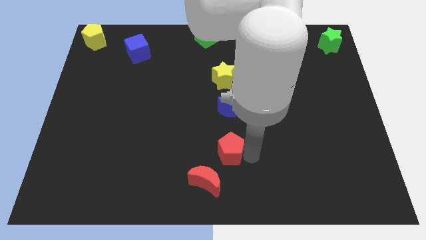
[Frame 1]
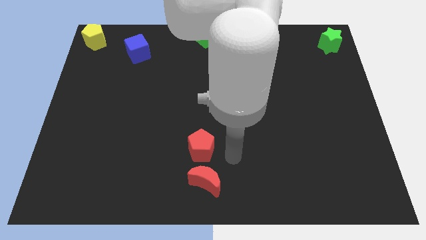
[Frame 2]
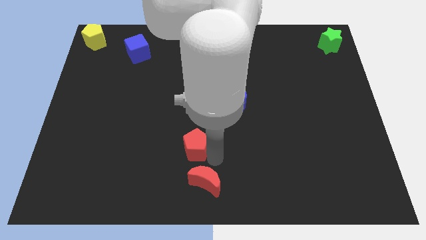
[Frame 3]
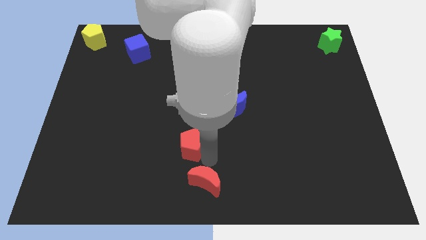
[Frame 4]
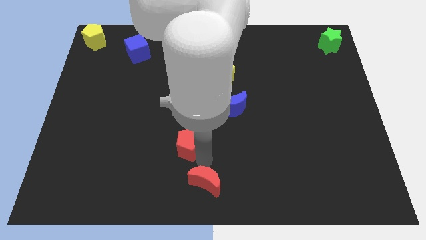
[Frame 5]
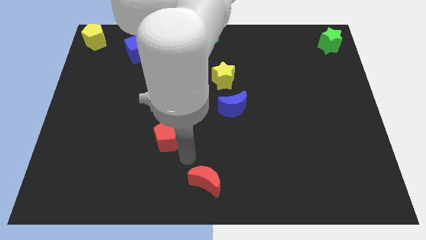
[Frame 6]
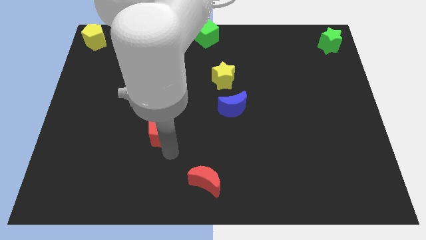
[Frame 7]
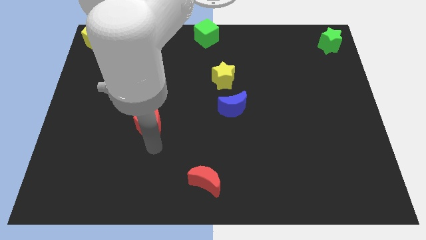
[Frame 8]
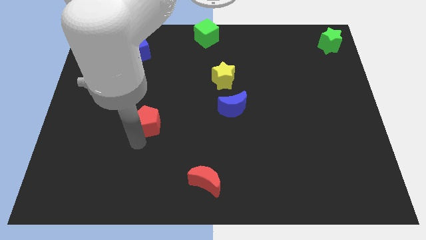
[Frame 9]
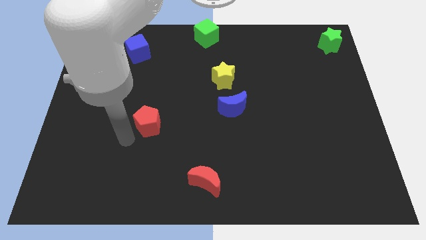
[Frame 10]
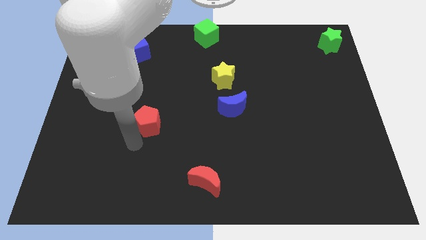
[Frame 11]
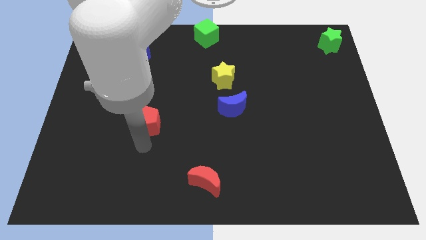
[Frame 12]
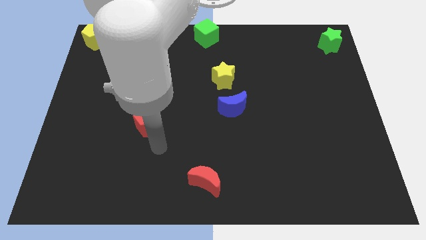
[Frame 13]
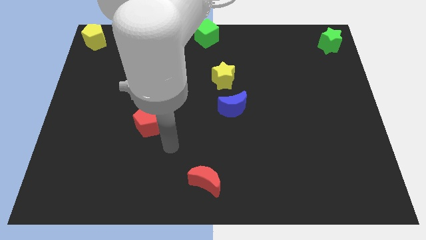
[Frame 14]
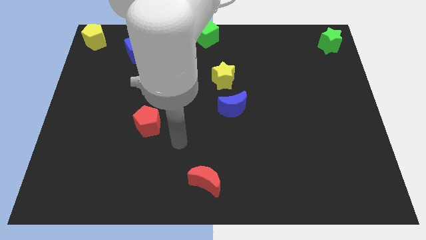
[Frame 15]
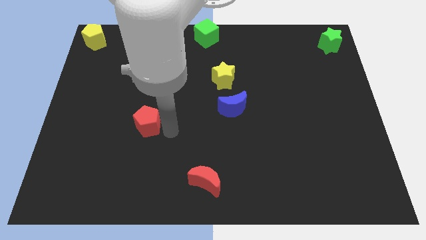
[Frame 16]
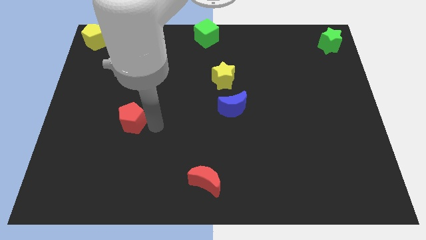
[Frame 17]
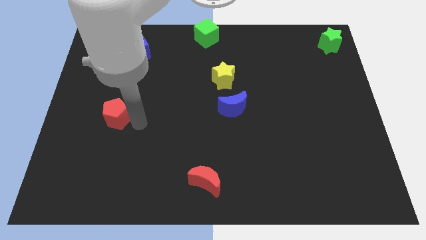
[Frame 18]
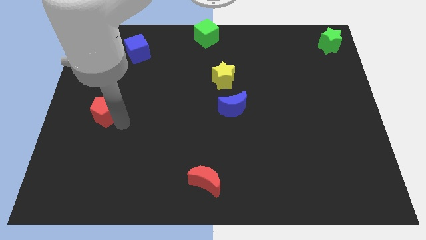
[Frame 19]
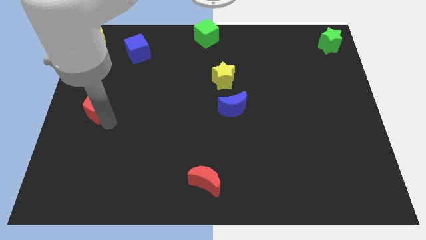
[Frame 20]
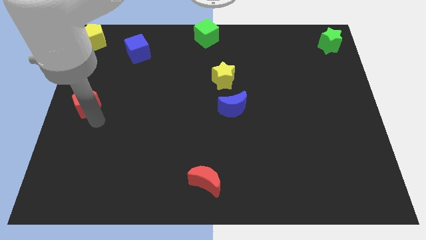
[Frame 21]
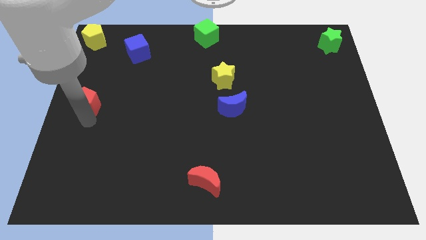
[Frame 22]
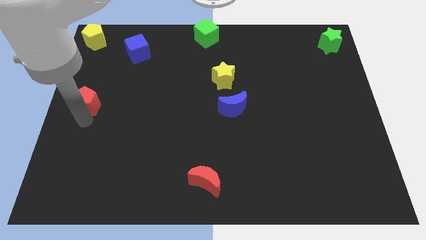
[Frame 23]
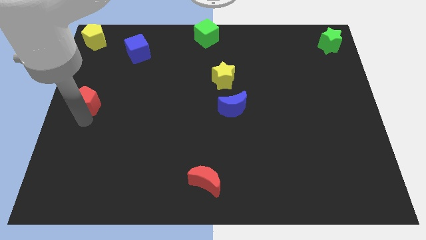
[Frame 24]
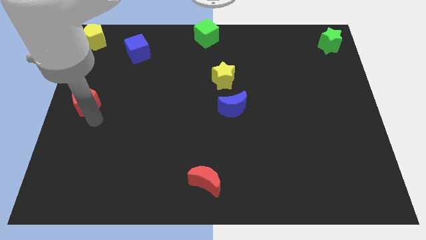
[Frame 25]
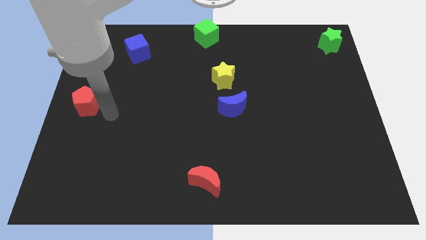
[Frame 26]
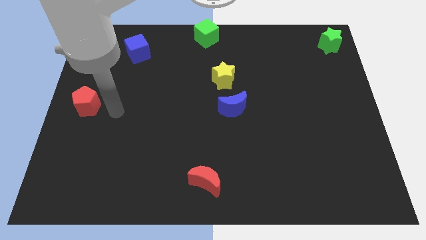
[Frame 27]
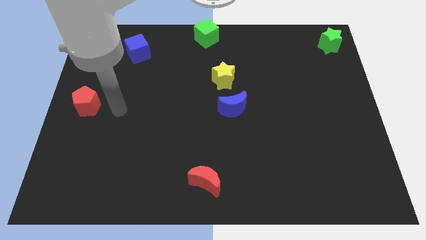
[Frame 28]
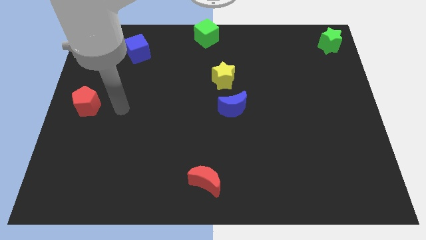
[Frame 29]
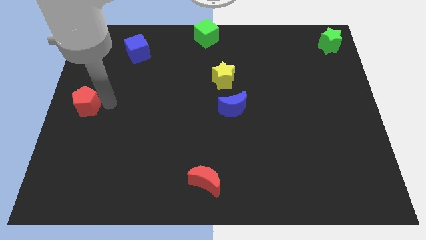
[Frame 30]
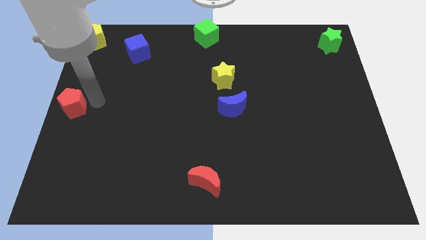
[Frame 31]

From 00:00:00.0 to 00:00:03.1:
move the red pentagon to the center left

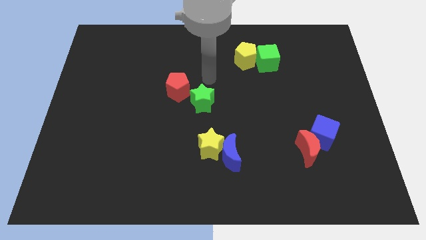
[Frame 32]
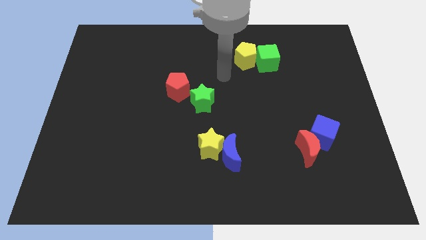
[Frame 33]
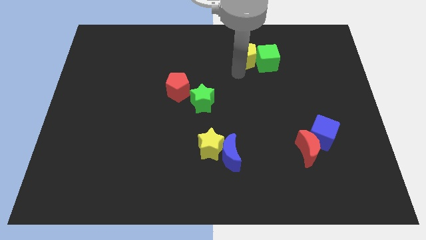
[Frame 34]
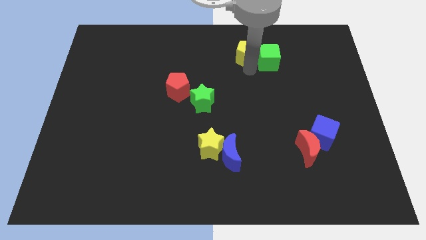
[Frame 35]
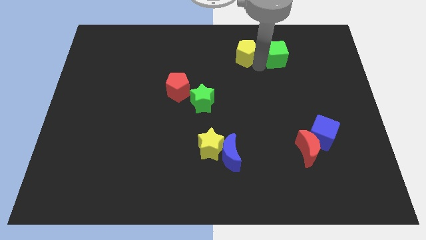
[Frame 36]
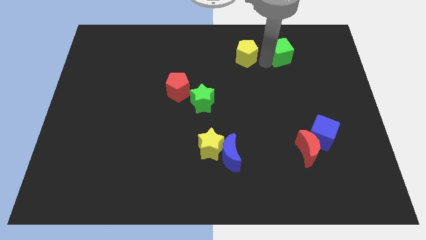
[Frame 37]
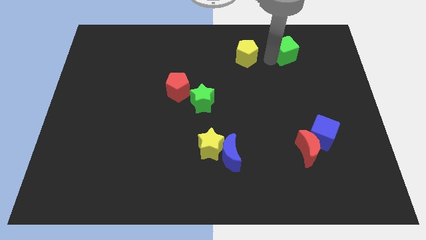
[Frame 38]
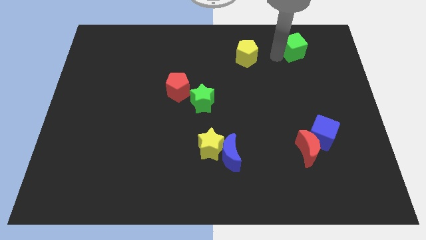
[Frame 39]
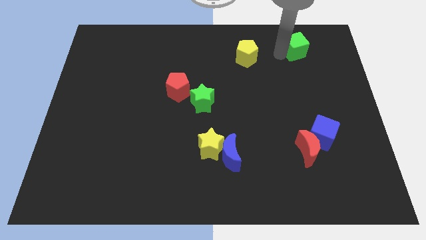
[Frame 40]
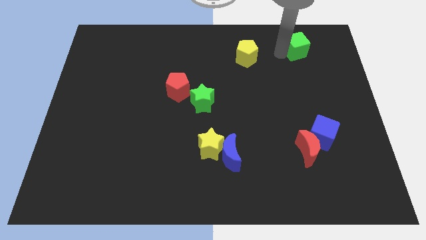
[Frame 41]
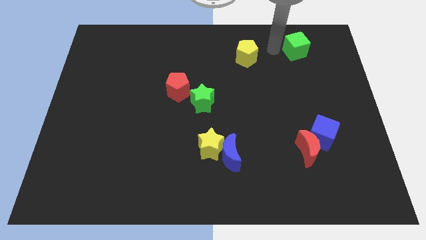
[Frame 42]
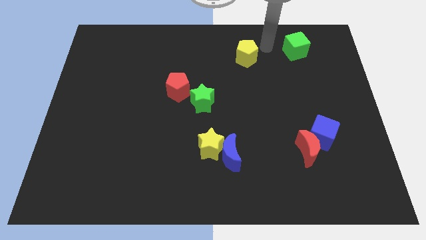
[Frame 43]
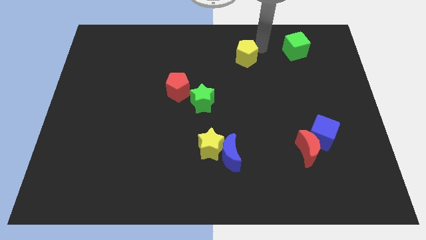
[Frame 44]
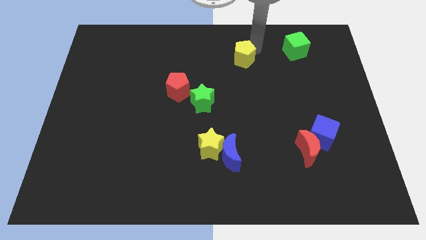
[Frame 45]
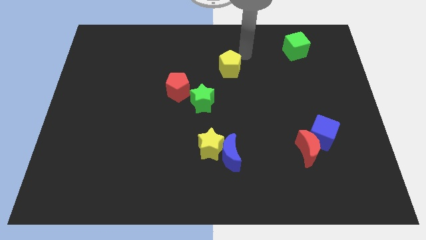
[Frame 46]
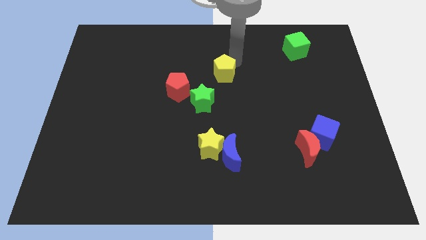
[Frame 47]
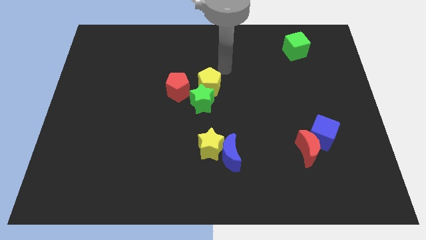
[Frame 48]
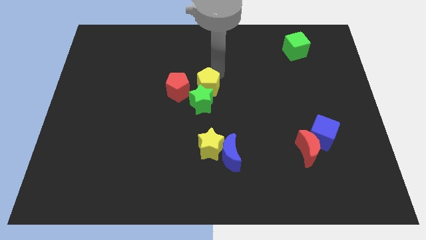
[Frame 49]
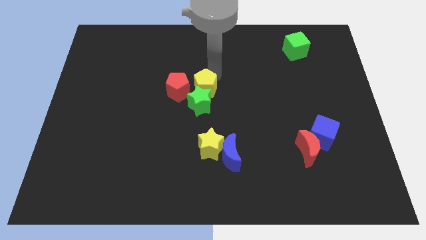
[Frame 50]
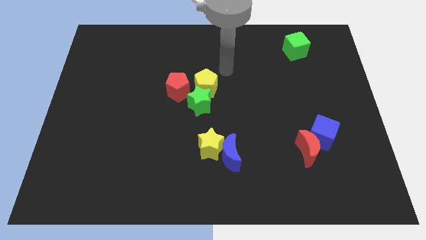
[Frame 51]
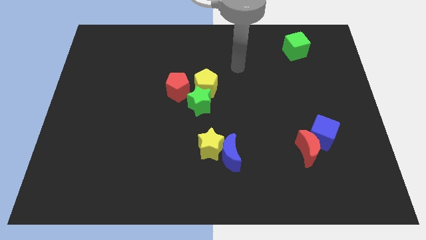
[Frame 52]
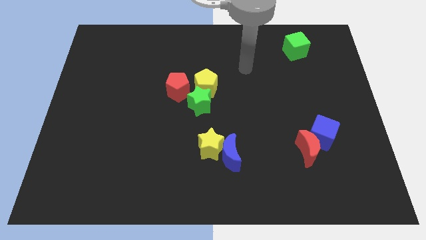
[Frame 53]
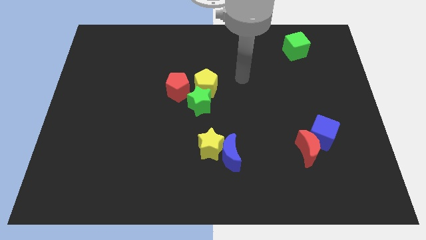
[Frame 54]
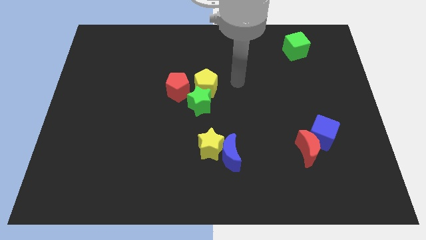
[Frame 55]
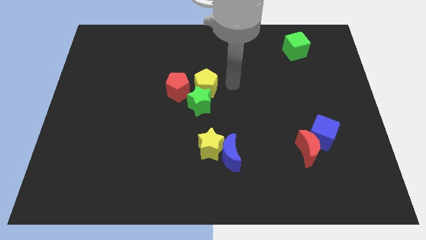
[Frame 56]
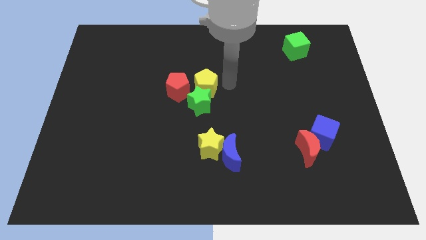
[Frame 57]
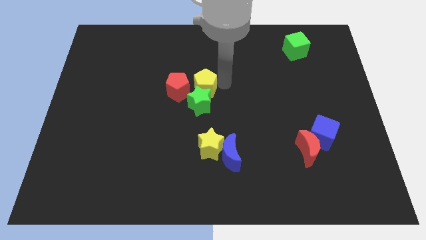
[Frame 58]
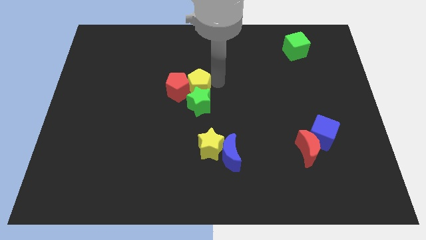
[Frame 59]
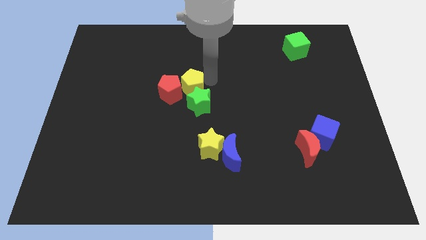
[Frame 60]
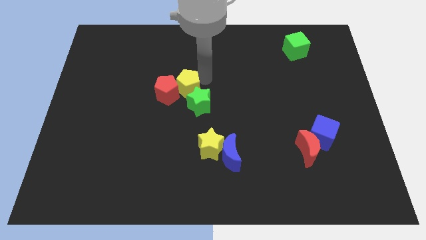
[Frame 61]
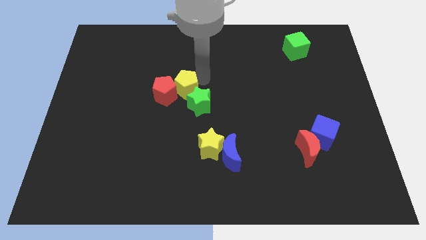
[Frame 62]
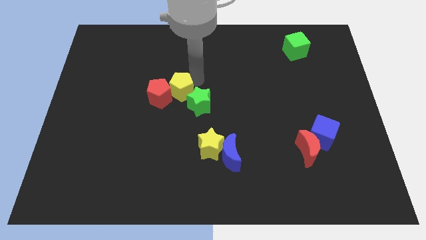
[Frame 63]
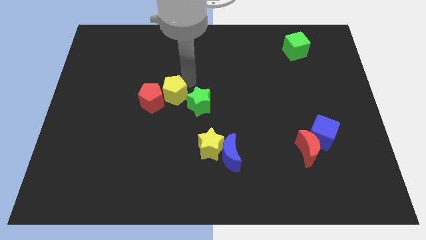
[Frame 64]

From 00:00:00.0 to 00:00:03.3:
separate the green cube from the yellow pentagon

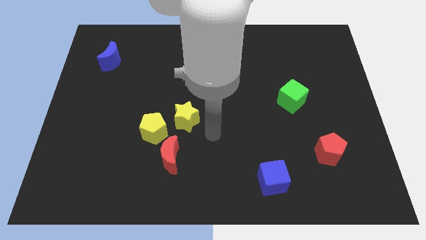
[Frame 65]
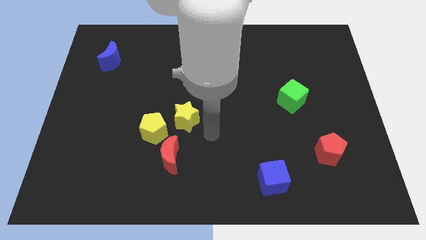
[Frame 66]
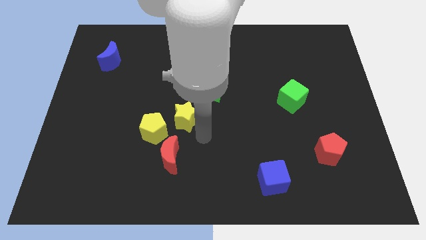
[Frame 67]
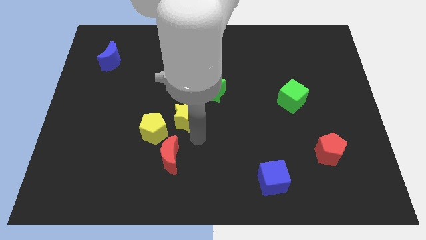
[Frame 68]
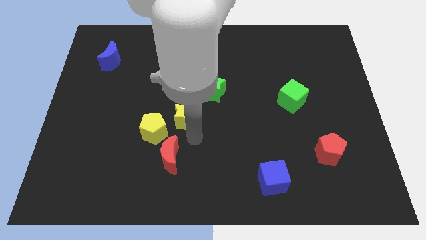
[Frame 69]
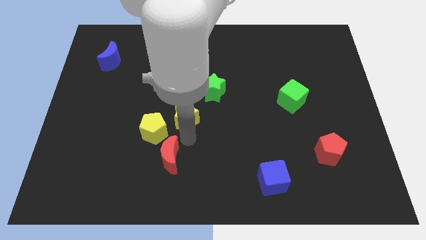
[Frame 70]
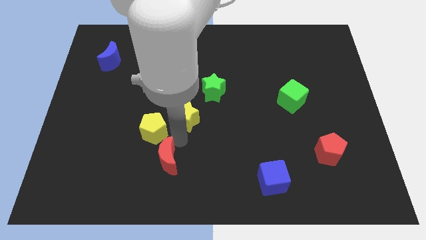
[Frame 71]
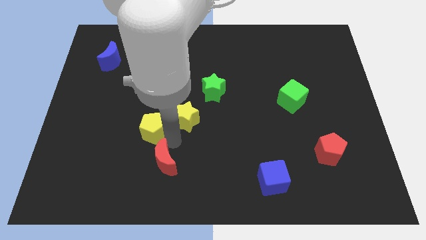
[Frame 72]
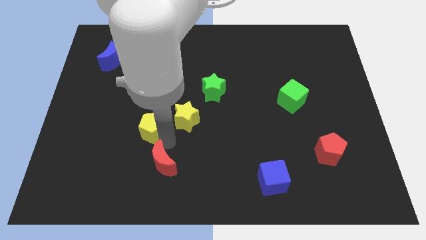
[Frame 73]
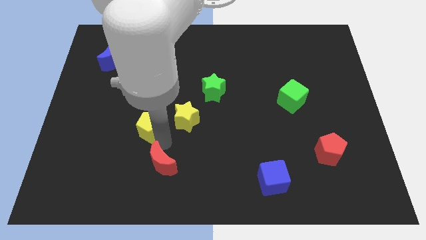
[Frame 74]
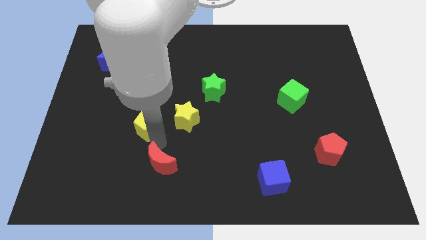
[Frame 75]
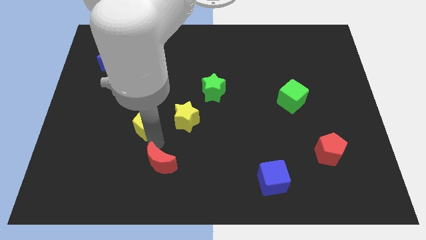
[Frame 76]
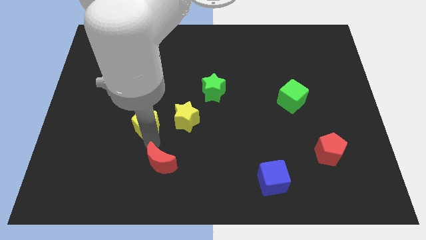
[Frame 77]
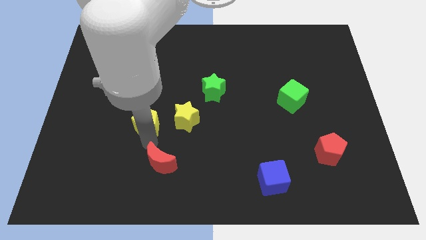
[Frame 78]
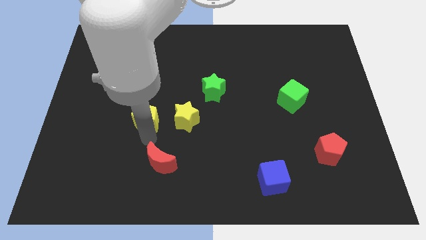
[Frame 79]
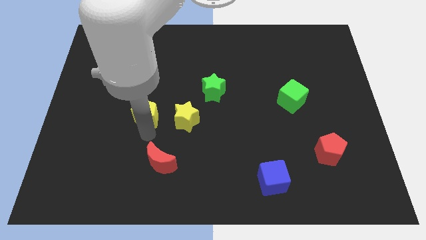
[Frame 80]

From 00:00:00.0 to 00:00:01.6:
push the yellow pentagon left to the yellow star

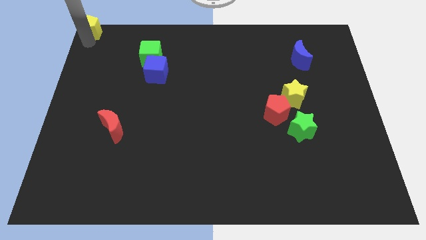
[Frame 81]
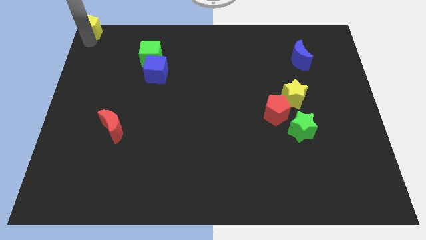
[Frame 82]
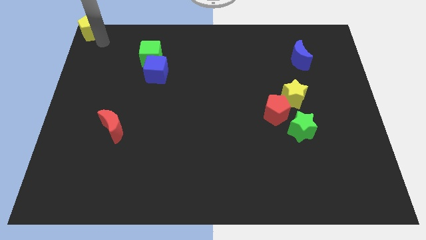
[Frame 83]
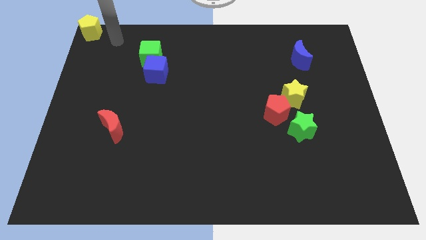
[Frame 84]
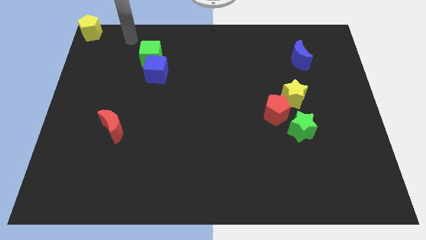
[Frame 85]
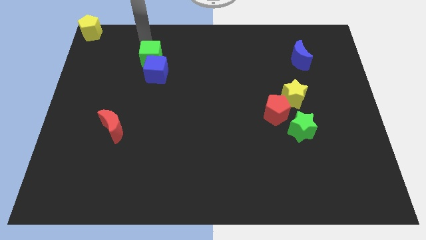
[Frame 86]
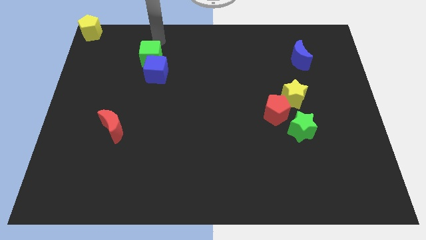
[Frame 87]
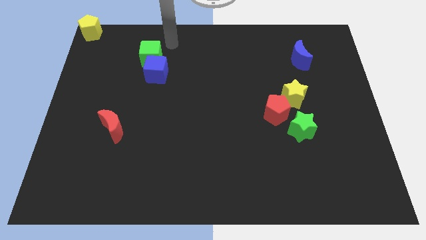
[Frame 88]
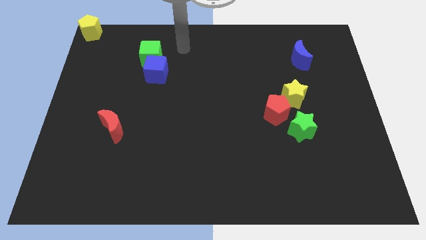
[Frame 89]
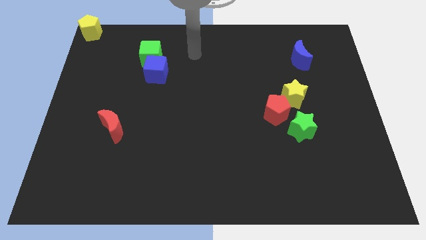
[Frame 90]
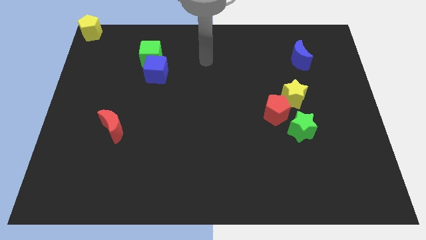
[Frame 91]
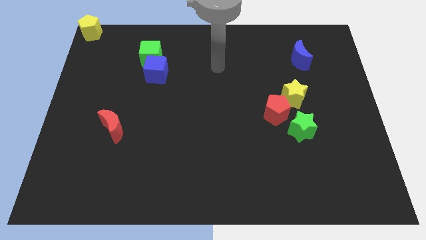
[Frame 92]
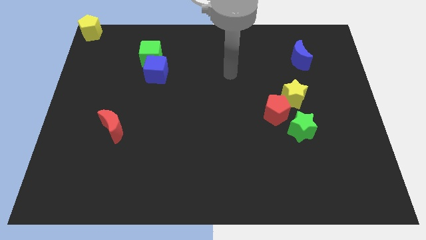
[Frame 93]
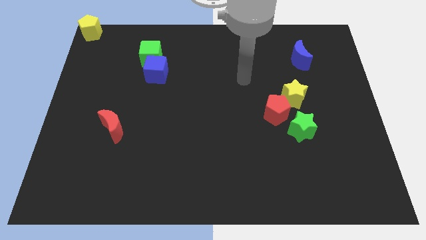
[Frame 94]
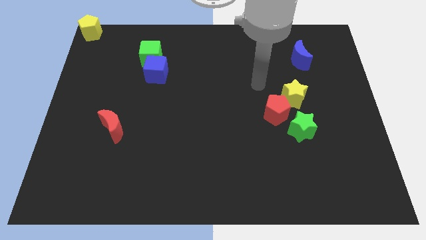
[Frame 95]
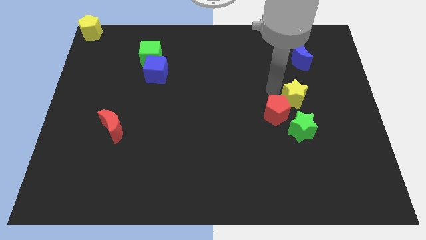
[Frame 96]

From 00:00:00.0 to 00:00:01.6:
point your arm diagonal above the red pentagon
